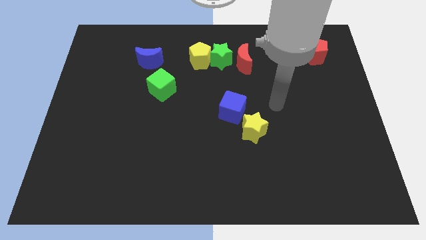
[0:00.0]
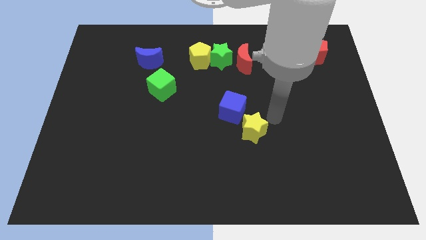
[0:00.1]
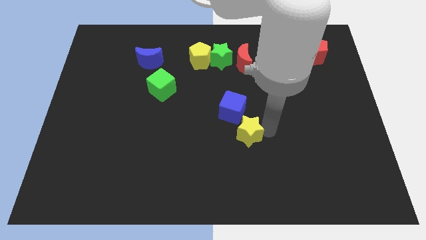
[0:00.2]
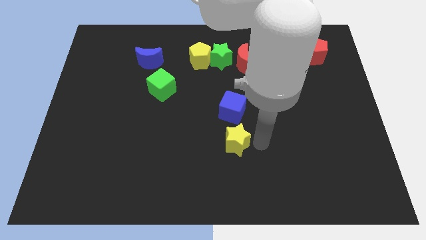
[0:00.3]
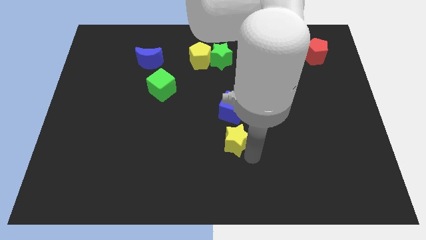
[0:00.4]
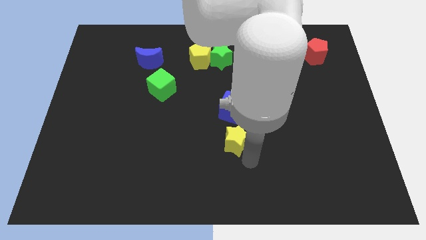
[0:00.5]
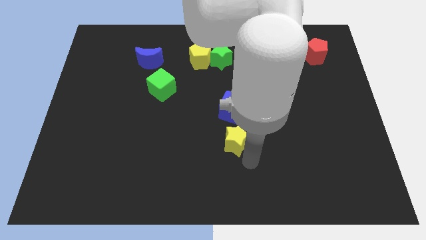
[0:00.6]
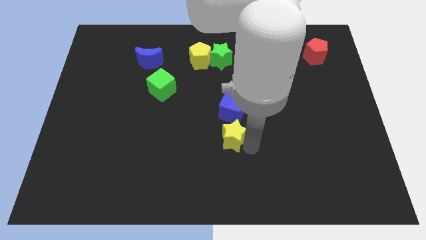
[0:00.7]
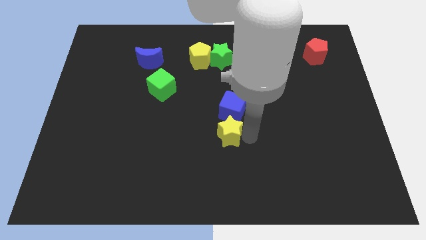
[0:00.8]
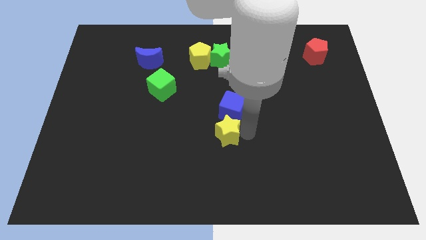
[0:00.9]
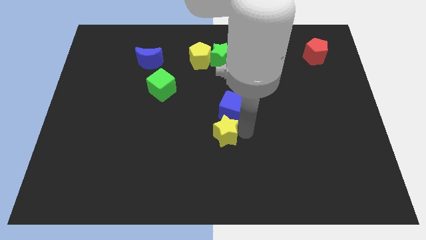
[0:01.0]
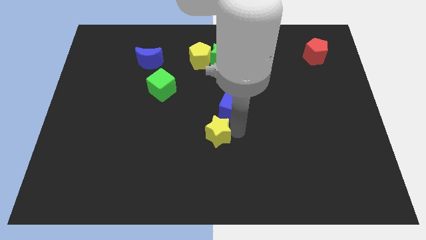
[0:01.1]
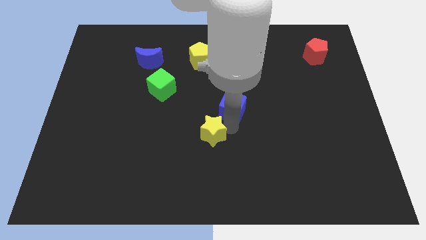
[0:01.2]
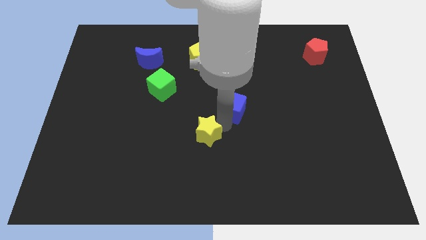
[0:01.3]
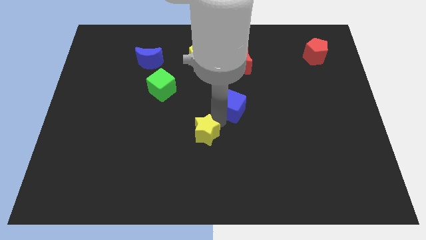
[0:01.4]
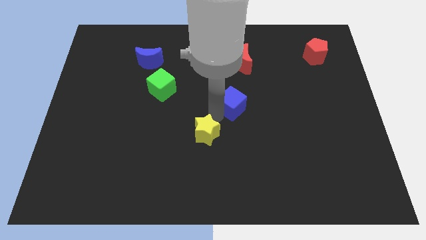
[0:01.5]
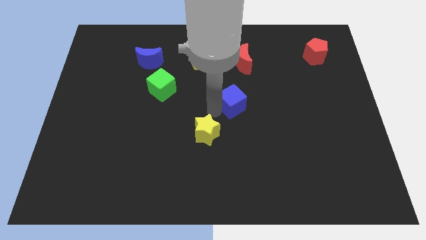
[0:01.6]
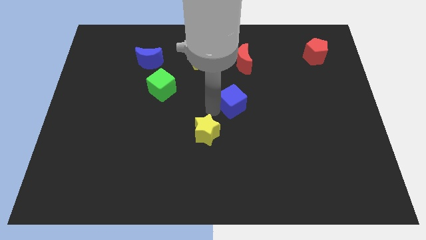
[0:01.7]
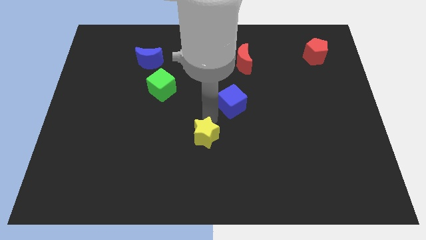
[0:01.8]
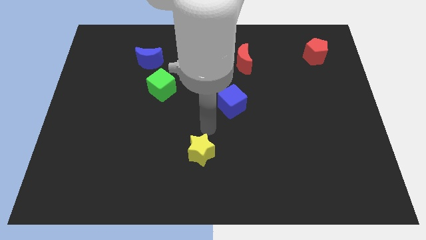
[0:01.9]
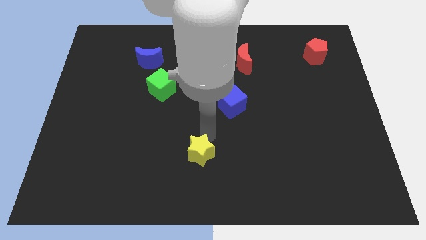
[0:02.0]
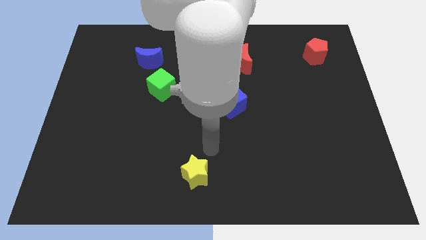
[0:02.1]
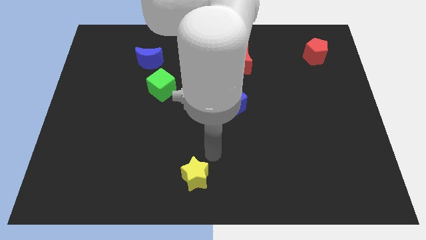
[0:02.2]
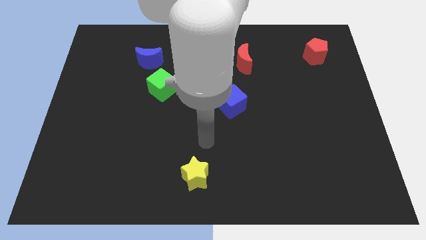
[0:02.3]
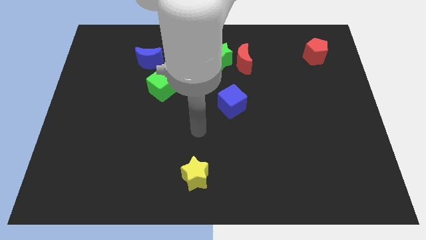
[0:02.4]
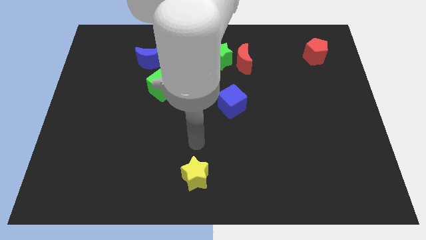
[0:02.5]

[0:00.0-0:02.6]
push the yellow star away from the blue cube

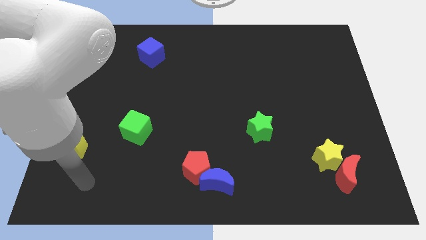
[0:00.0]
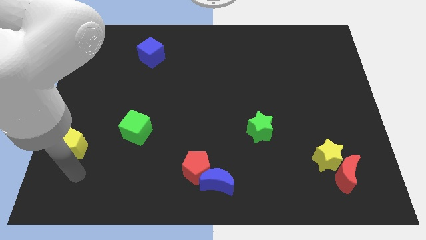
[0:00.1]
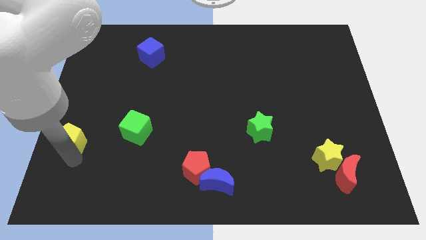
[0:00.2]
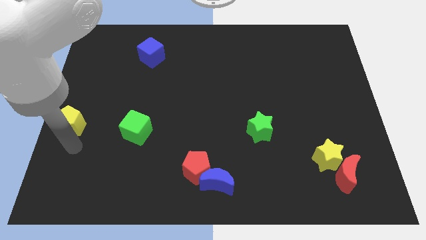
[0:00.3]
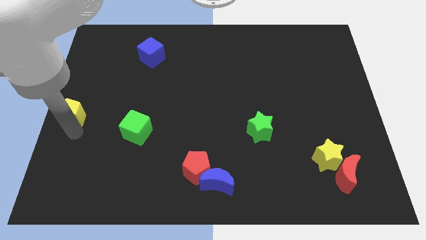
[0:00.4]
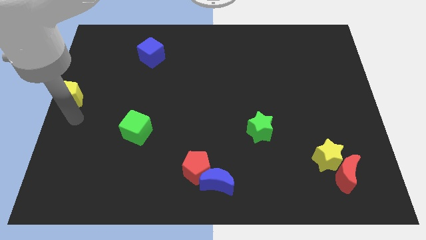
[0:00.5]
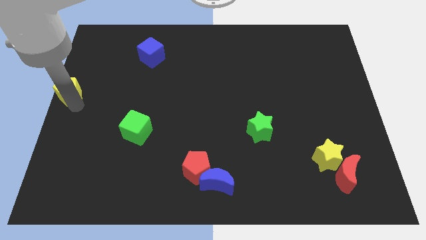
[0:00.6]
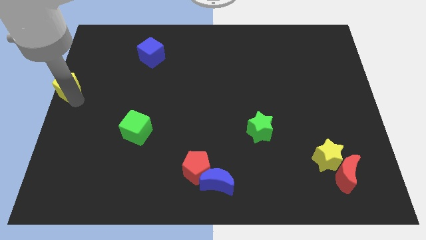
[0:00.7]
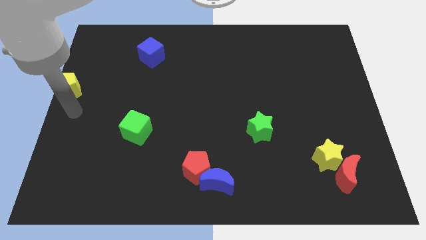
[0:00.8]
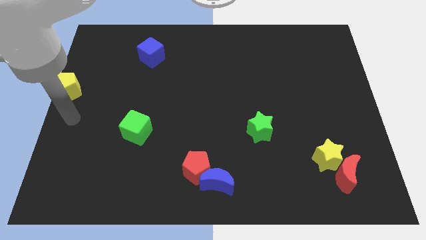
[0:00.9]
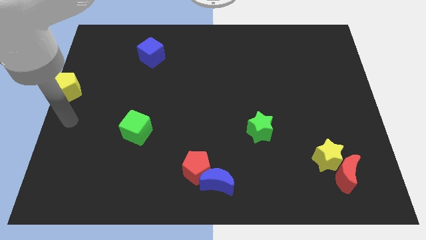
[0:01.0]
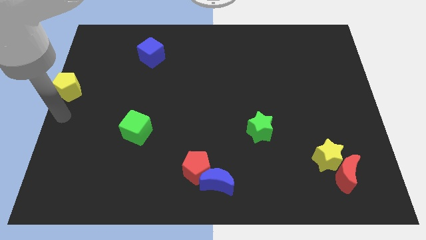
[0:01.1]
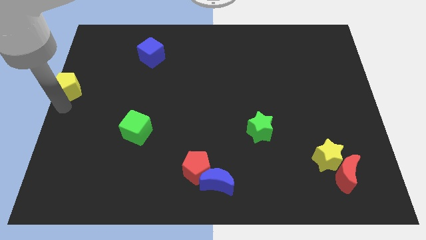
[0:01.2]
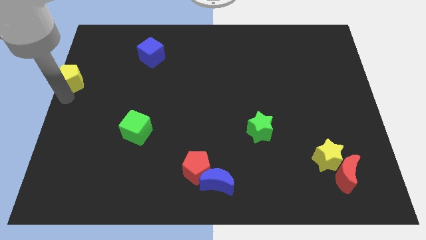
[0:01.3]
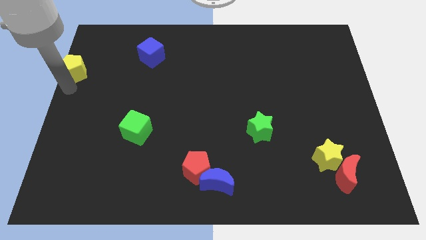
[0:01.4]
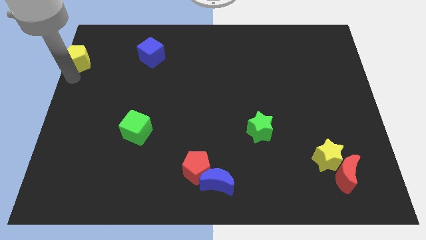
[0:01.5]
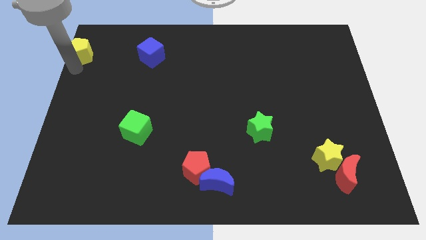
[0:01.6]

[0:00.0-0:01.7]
put the yellow pentagon parallel to blue cube

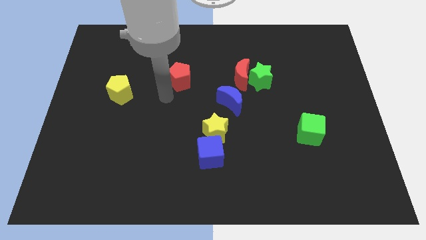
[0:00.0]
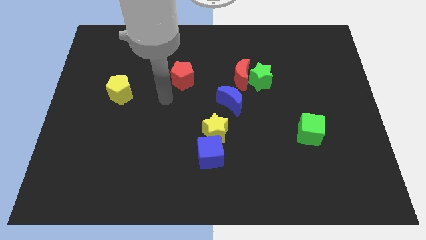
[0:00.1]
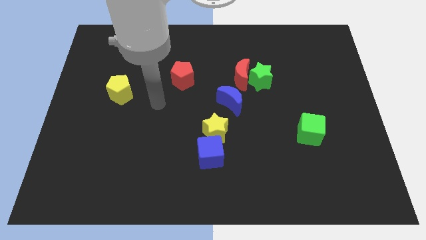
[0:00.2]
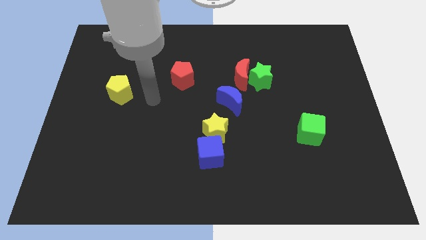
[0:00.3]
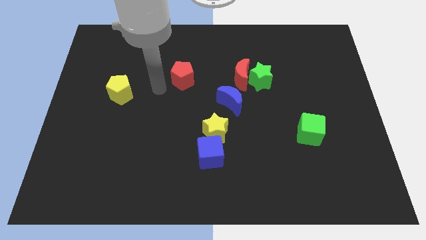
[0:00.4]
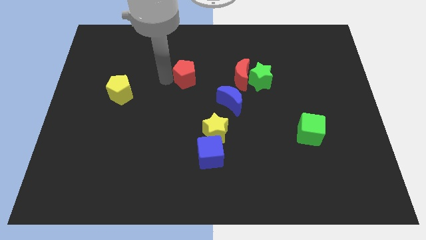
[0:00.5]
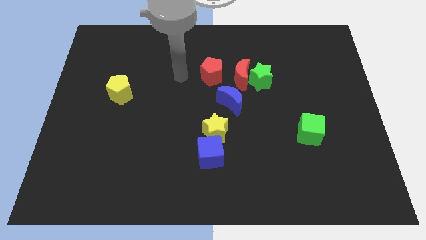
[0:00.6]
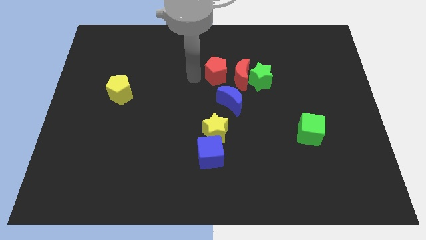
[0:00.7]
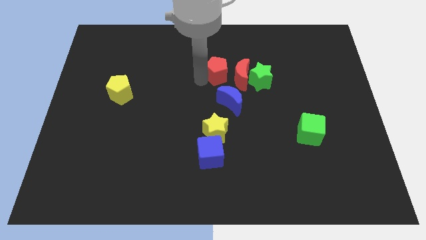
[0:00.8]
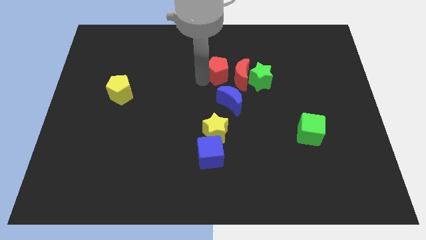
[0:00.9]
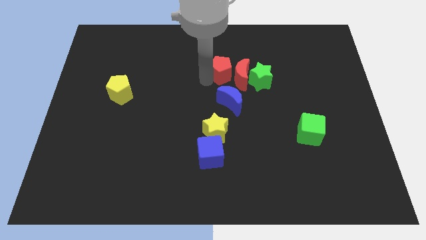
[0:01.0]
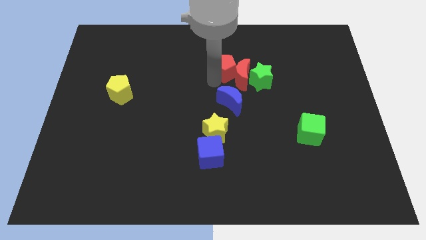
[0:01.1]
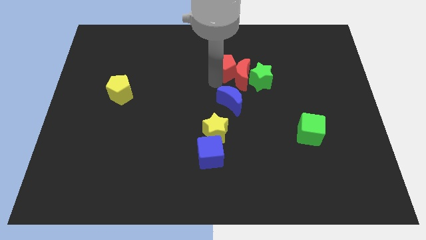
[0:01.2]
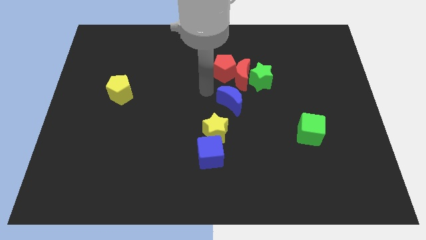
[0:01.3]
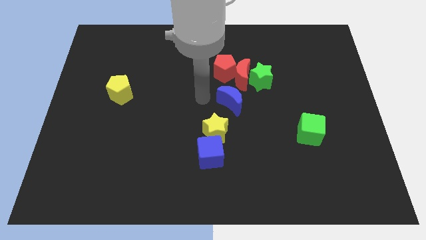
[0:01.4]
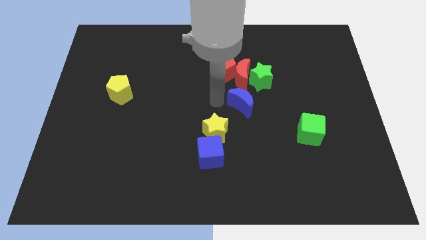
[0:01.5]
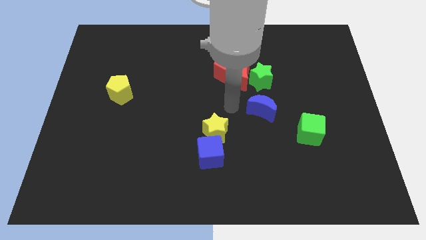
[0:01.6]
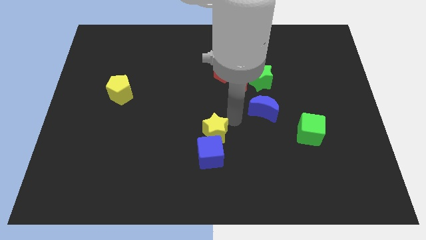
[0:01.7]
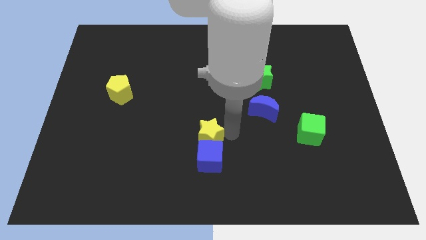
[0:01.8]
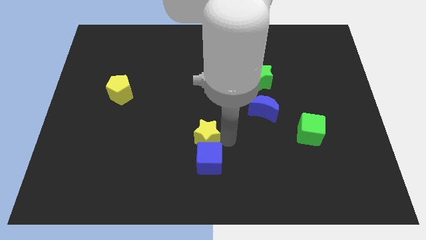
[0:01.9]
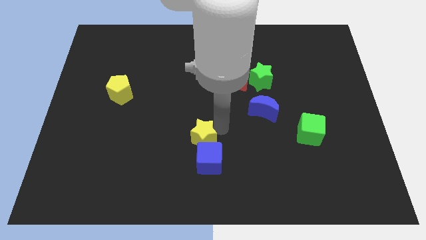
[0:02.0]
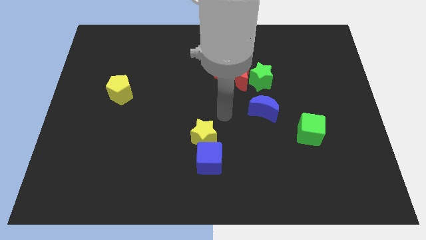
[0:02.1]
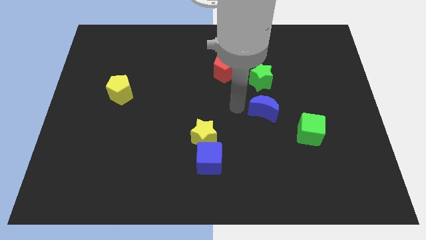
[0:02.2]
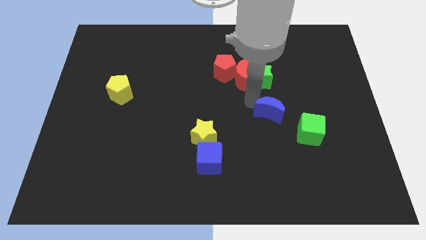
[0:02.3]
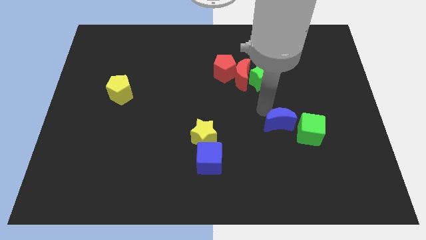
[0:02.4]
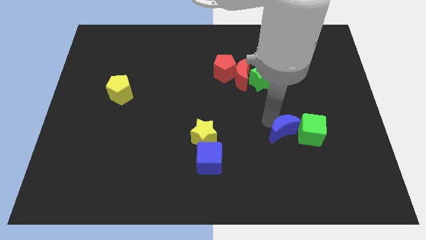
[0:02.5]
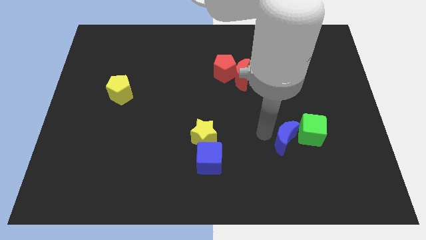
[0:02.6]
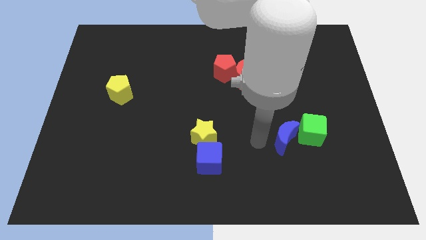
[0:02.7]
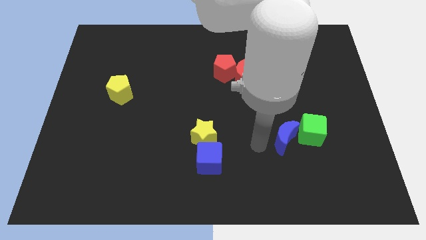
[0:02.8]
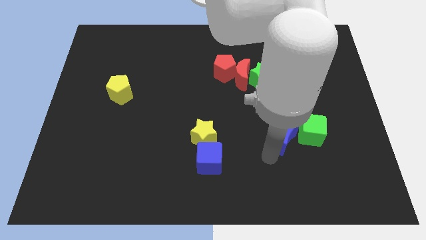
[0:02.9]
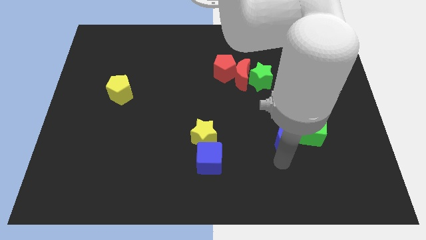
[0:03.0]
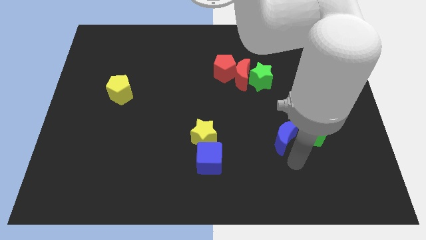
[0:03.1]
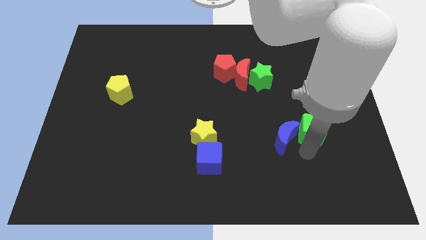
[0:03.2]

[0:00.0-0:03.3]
move the blue crescent to the left of the green cube

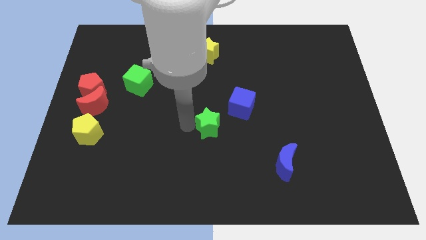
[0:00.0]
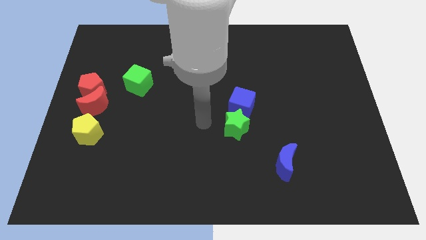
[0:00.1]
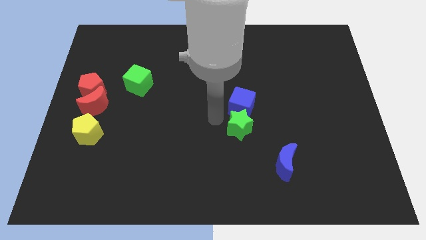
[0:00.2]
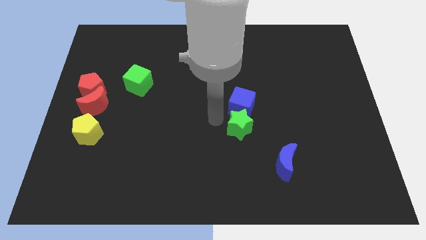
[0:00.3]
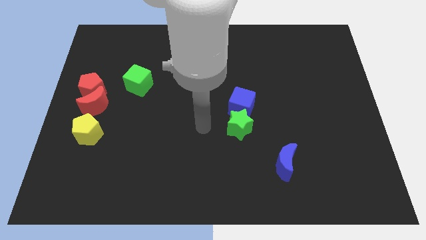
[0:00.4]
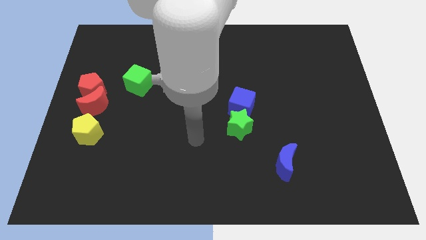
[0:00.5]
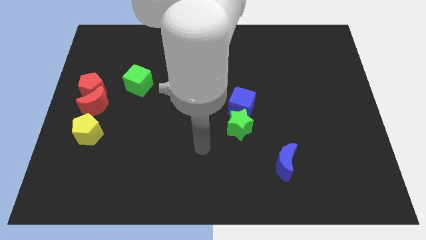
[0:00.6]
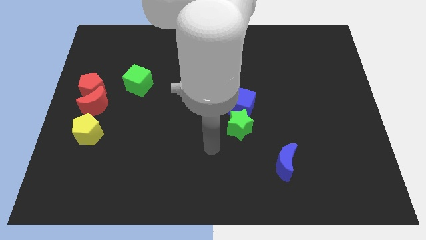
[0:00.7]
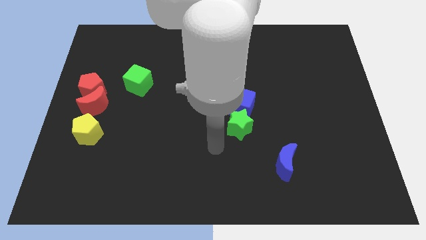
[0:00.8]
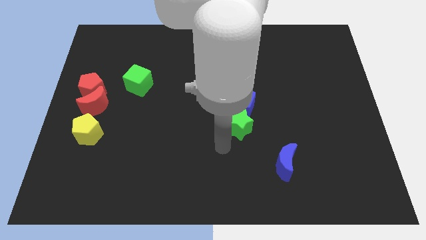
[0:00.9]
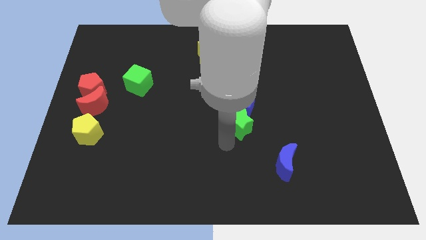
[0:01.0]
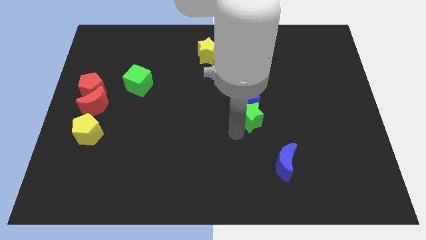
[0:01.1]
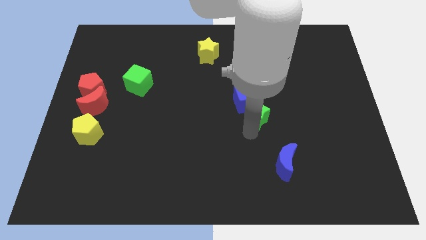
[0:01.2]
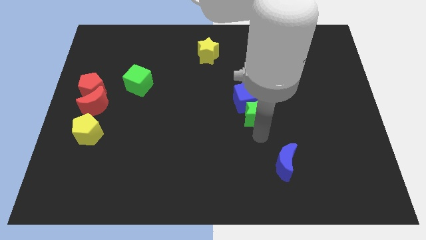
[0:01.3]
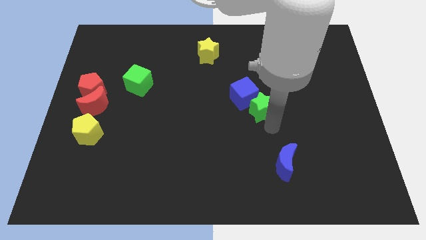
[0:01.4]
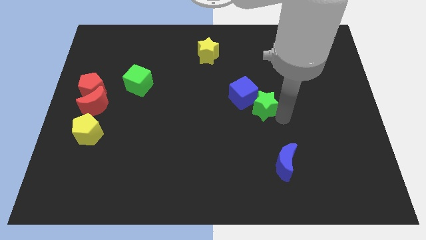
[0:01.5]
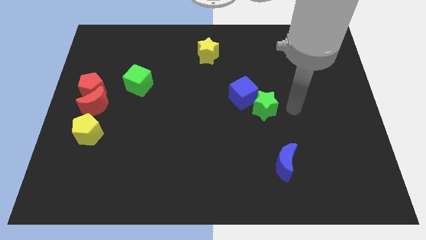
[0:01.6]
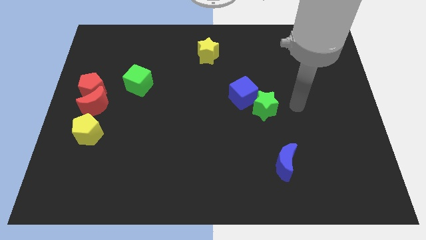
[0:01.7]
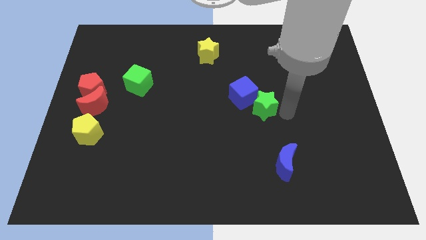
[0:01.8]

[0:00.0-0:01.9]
push the green star into the blue cube
